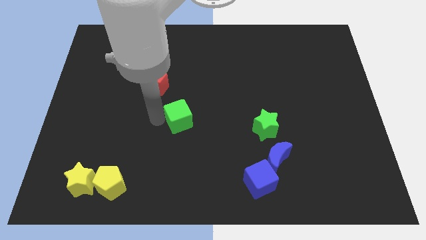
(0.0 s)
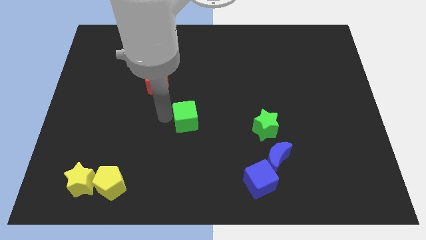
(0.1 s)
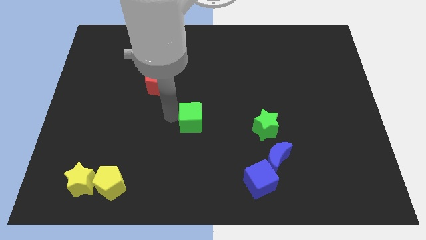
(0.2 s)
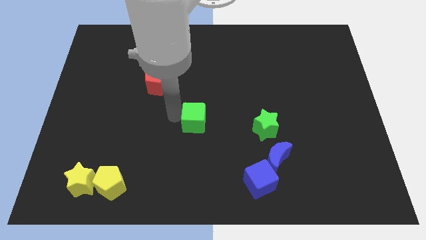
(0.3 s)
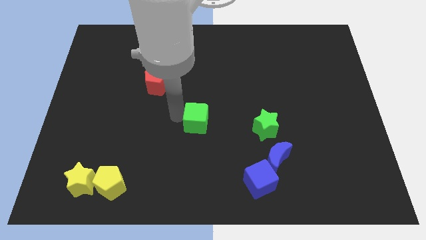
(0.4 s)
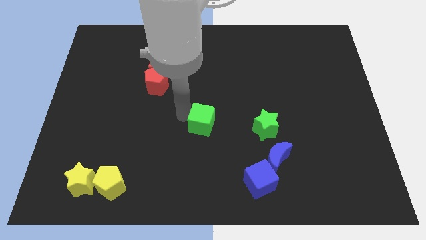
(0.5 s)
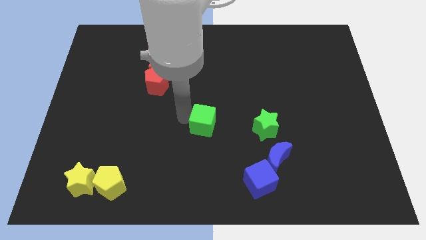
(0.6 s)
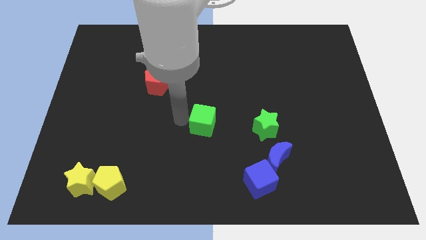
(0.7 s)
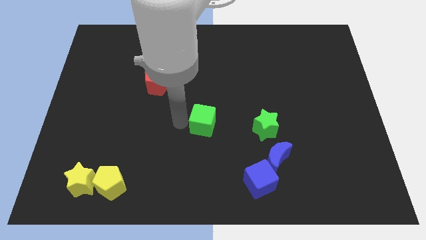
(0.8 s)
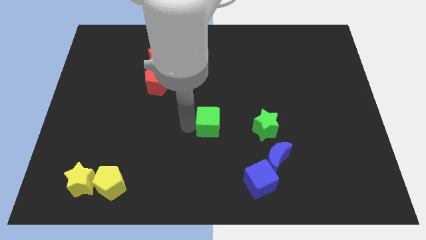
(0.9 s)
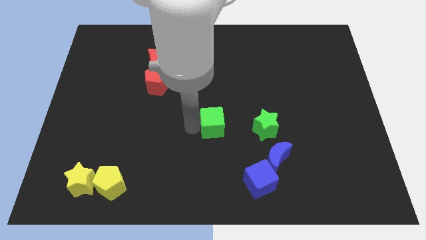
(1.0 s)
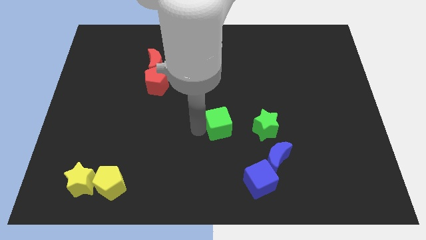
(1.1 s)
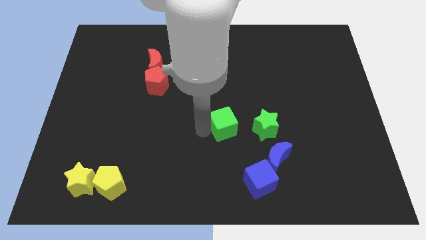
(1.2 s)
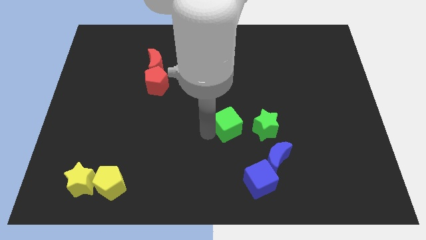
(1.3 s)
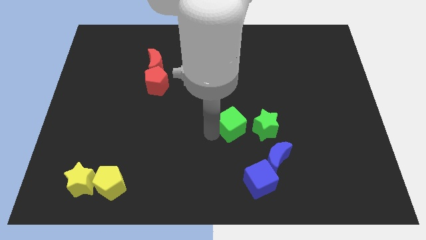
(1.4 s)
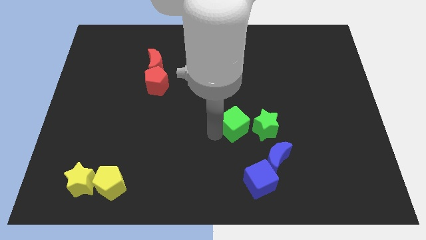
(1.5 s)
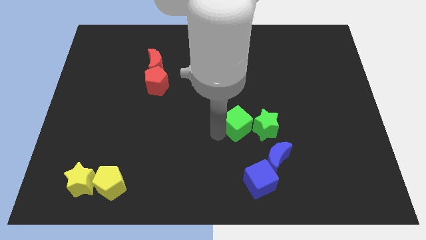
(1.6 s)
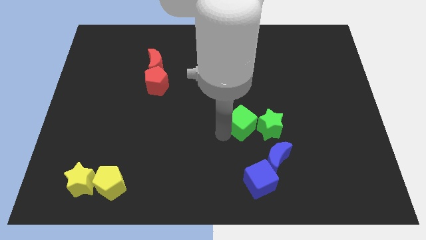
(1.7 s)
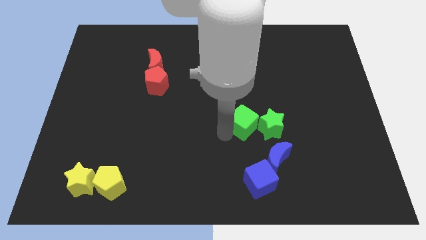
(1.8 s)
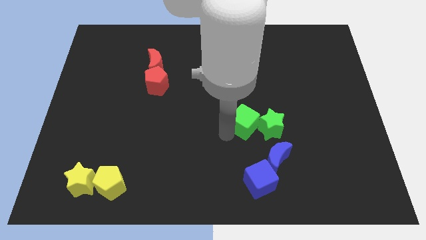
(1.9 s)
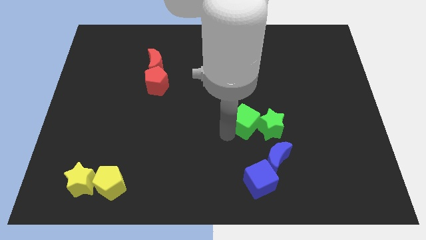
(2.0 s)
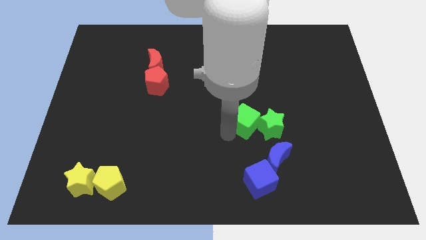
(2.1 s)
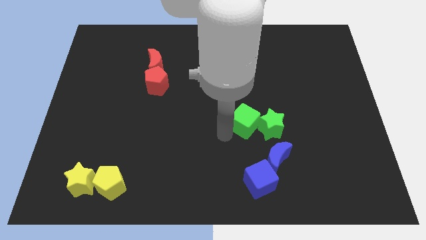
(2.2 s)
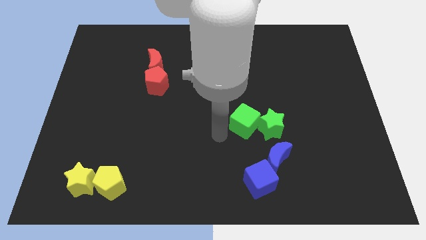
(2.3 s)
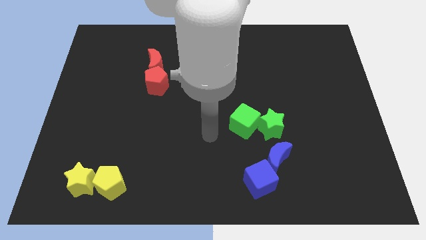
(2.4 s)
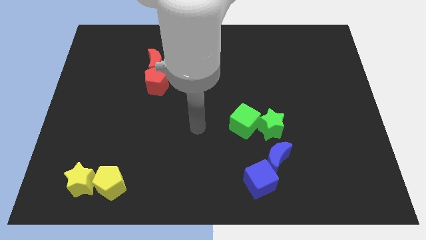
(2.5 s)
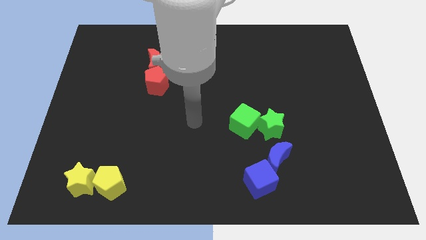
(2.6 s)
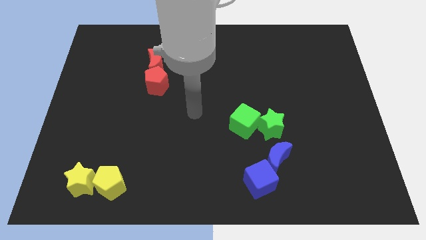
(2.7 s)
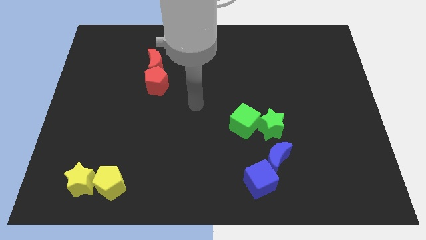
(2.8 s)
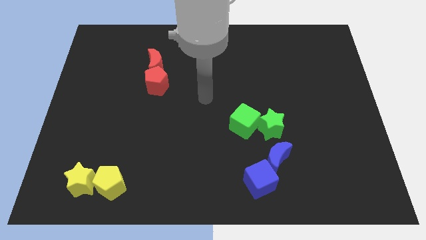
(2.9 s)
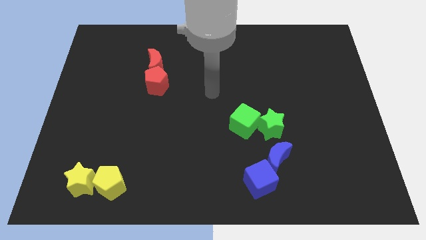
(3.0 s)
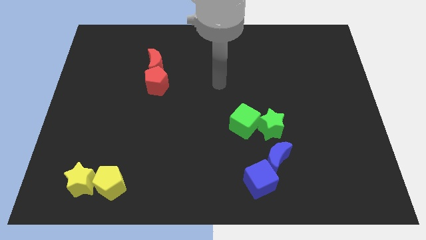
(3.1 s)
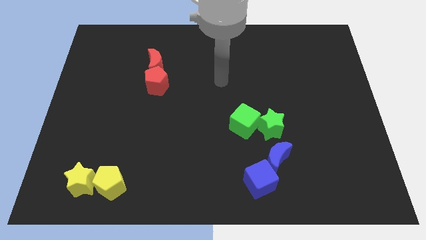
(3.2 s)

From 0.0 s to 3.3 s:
push the green cube into green star

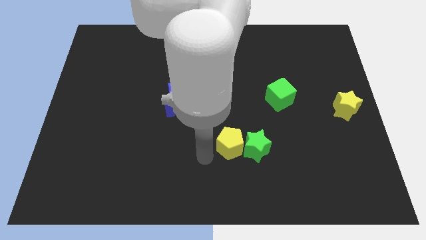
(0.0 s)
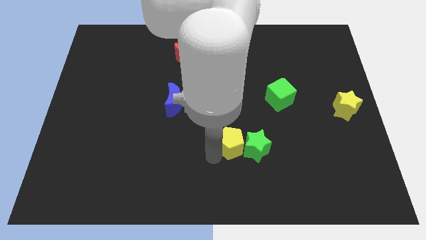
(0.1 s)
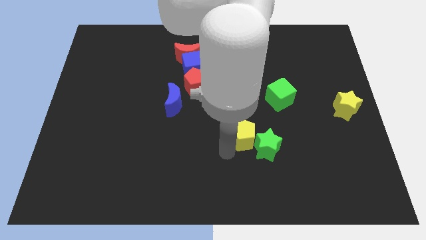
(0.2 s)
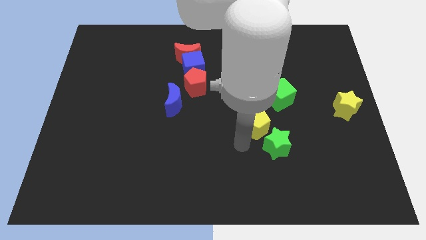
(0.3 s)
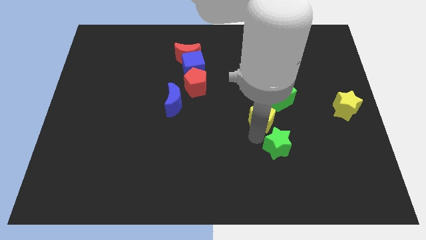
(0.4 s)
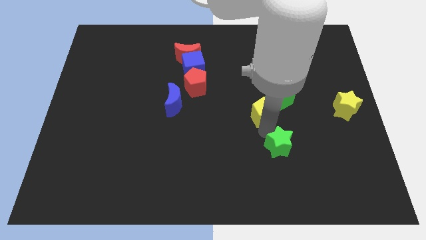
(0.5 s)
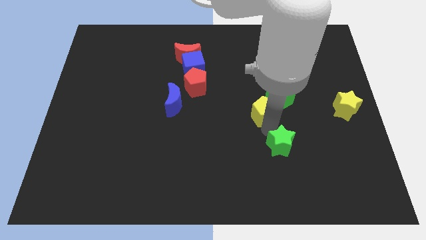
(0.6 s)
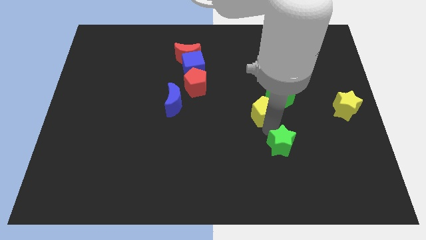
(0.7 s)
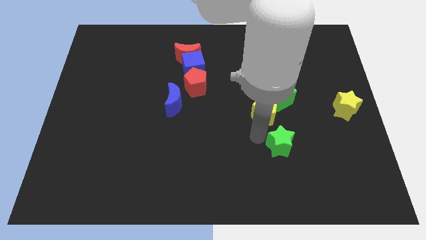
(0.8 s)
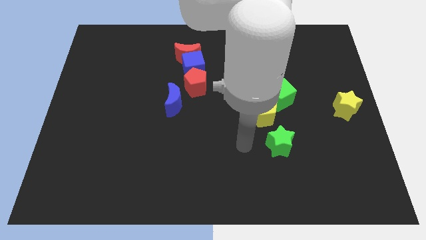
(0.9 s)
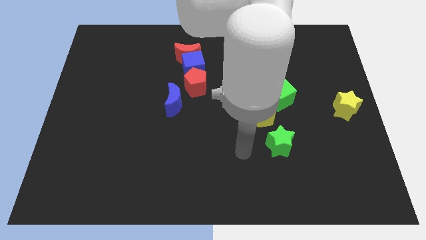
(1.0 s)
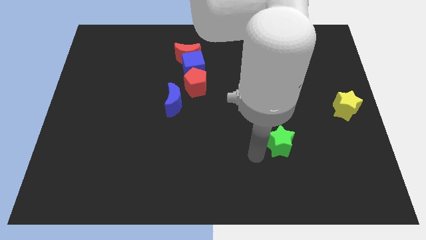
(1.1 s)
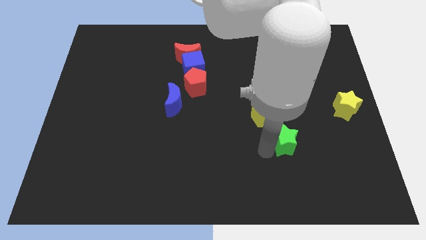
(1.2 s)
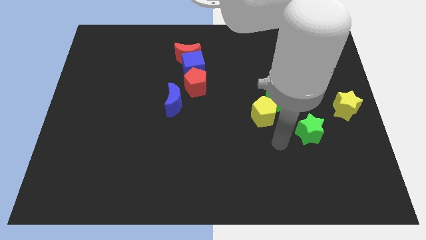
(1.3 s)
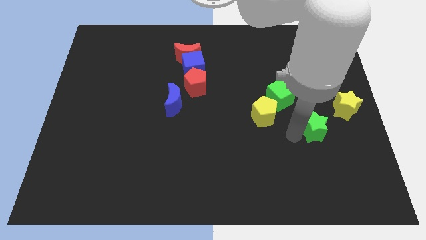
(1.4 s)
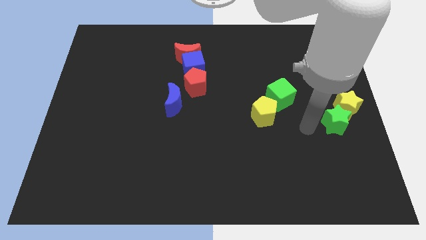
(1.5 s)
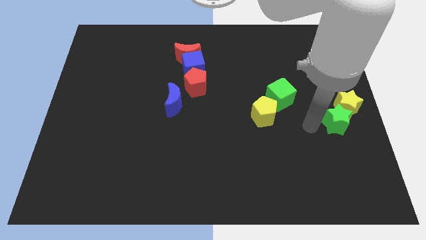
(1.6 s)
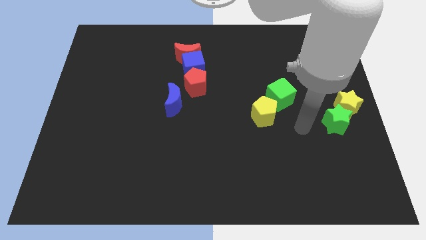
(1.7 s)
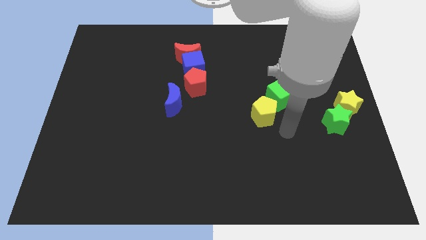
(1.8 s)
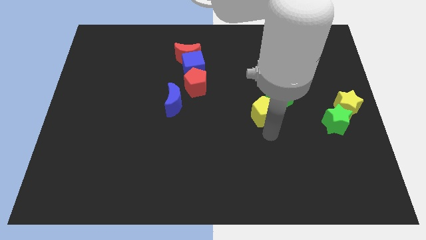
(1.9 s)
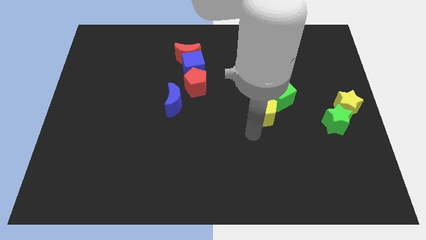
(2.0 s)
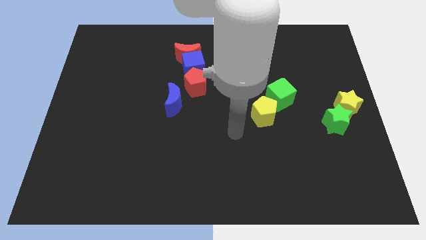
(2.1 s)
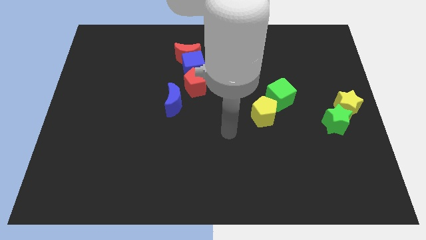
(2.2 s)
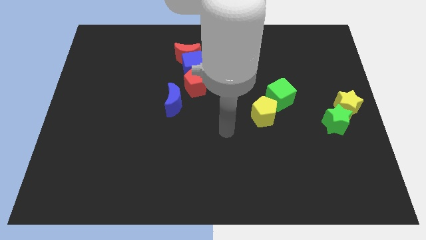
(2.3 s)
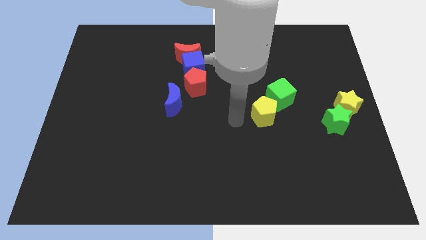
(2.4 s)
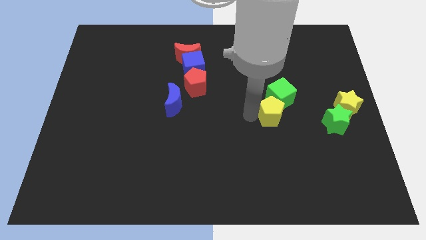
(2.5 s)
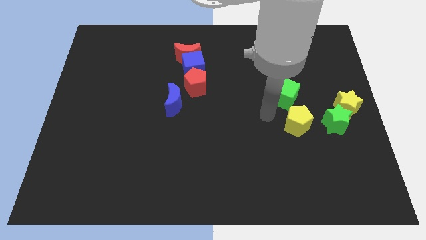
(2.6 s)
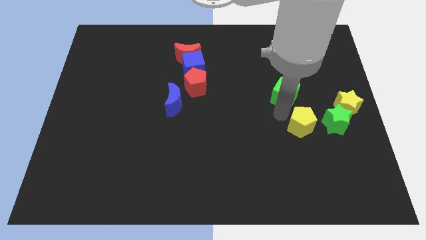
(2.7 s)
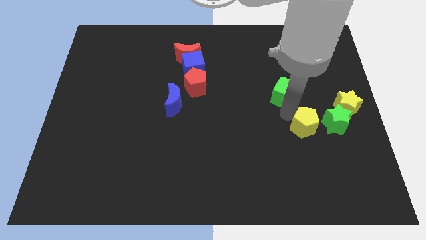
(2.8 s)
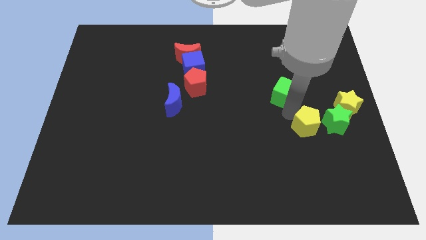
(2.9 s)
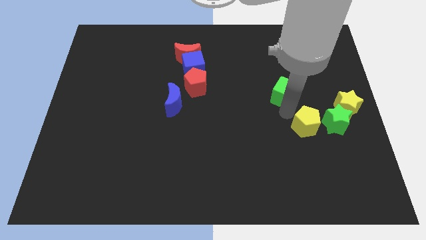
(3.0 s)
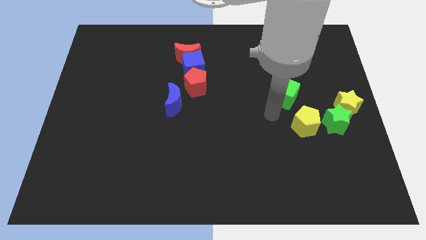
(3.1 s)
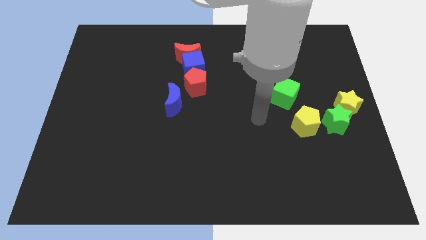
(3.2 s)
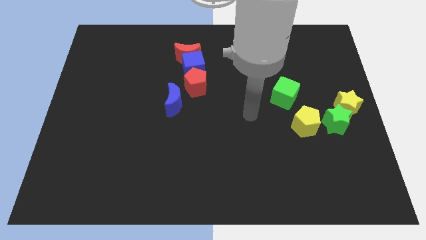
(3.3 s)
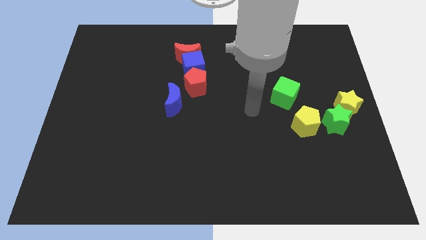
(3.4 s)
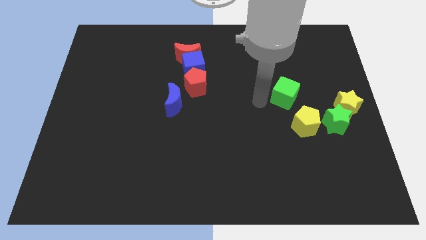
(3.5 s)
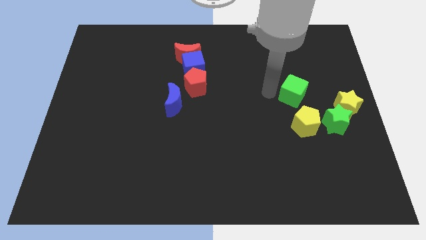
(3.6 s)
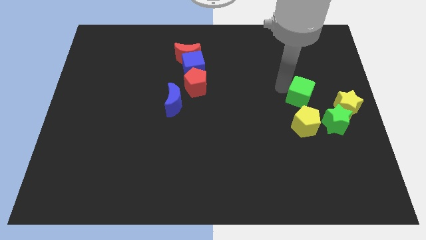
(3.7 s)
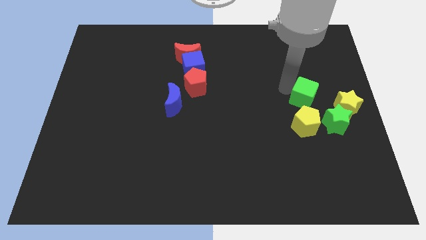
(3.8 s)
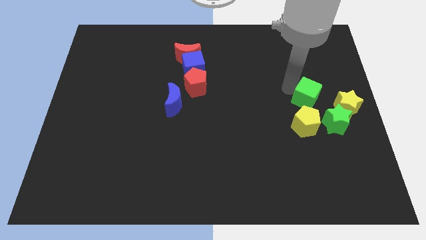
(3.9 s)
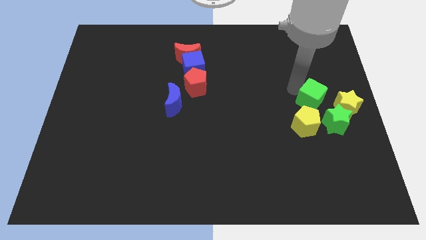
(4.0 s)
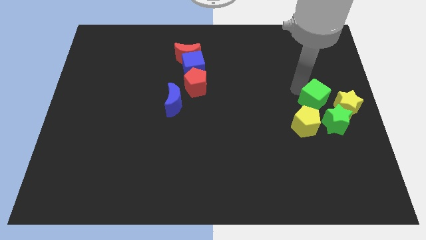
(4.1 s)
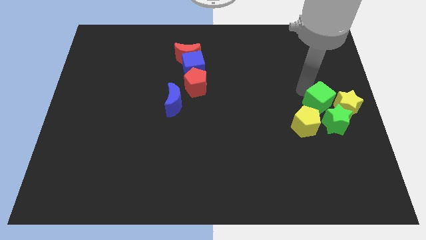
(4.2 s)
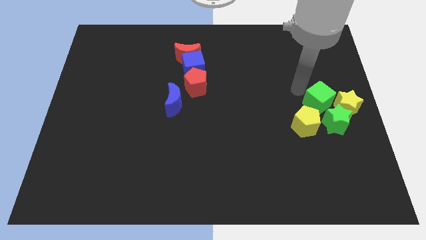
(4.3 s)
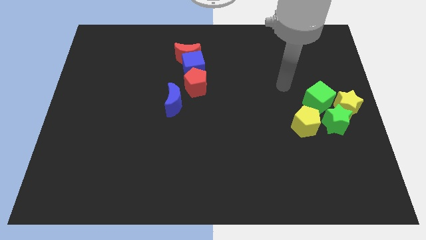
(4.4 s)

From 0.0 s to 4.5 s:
put all the green and yellow blocks together at the center right of the board

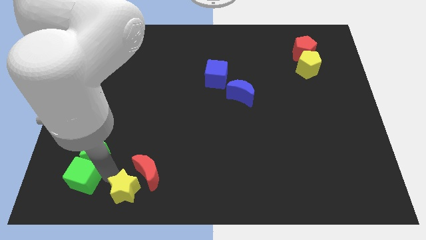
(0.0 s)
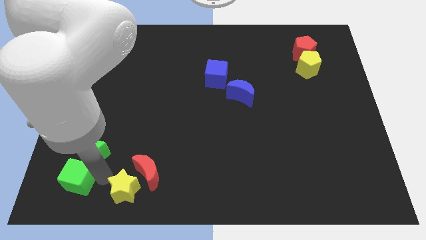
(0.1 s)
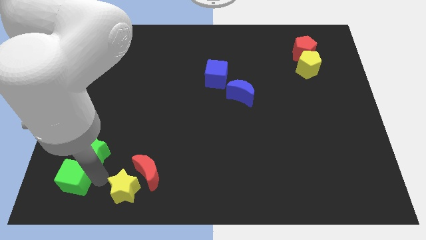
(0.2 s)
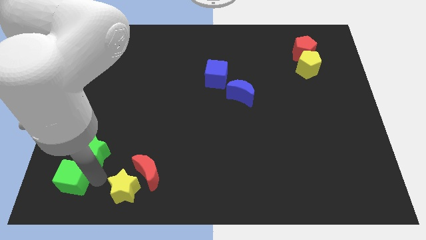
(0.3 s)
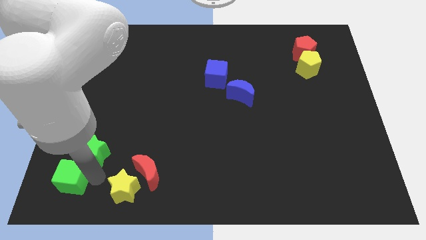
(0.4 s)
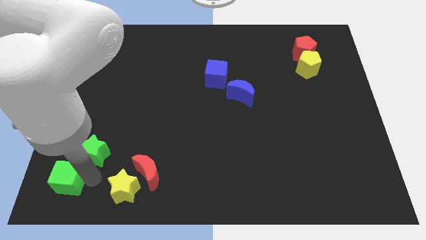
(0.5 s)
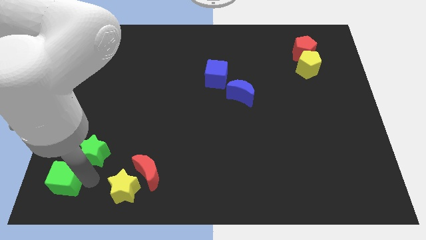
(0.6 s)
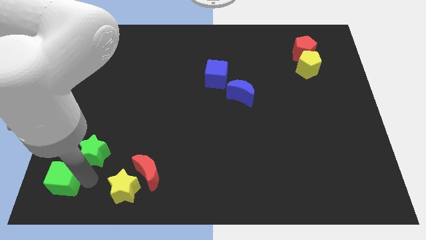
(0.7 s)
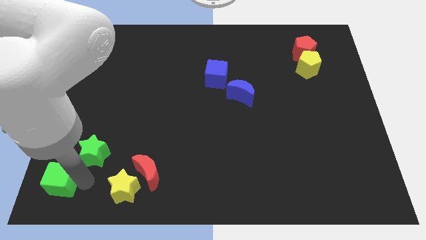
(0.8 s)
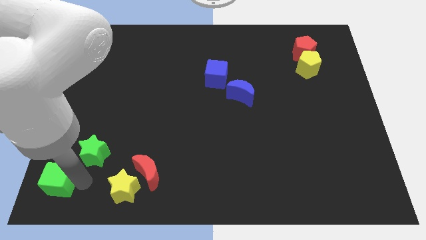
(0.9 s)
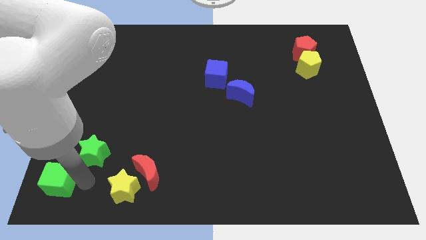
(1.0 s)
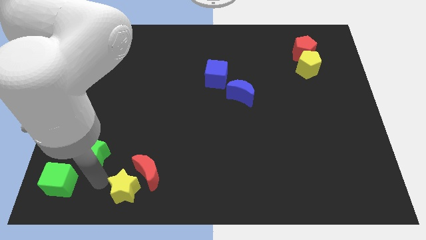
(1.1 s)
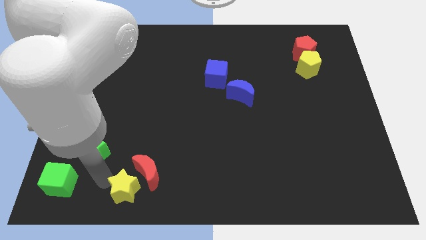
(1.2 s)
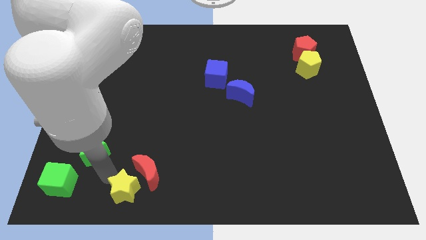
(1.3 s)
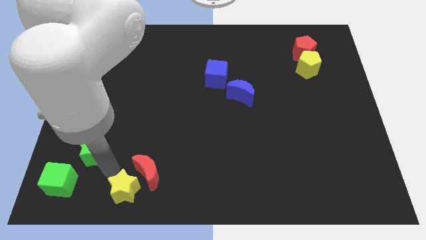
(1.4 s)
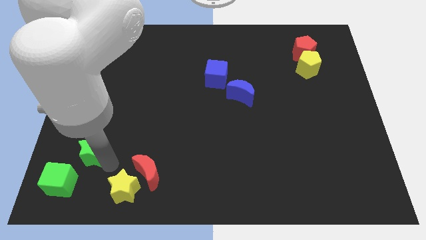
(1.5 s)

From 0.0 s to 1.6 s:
move the green cube to the left
